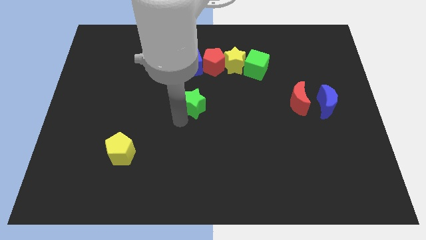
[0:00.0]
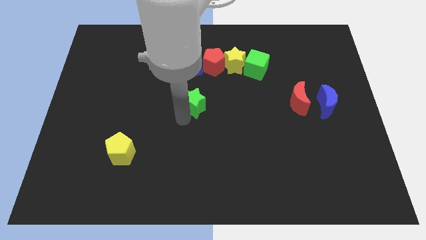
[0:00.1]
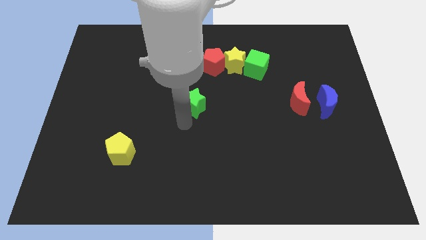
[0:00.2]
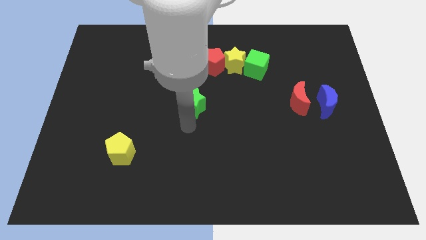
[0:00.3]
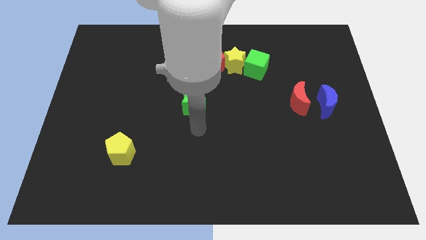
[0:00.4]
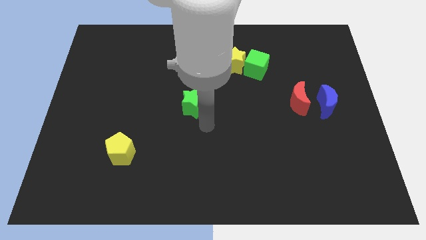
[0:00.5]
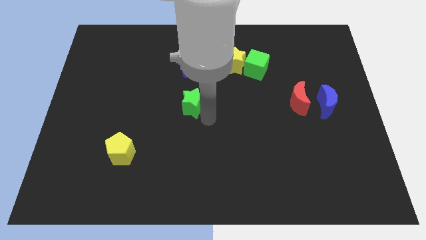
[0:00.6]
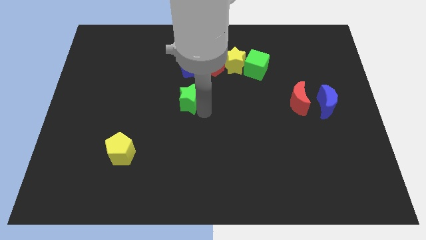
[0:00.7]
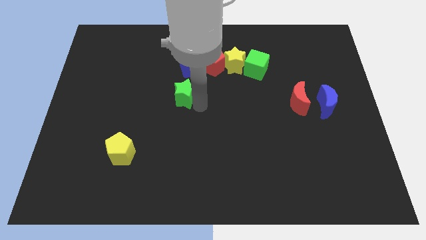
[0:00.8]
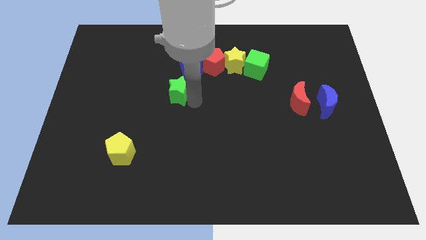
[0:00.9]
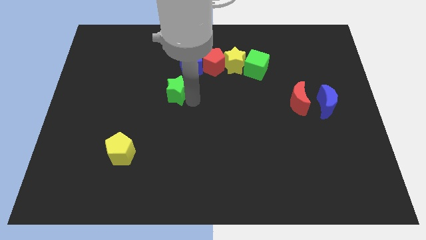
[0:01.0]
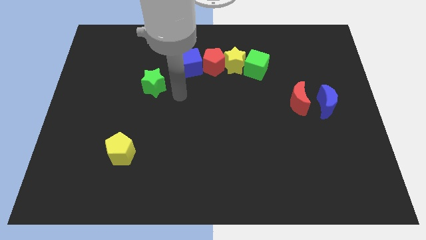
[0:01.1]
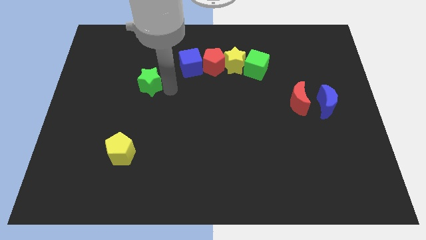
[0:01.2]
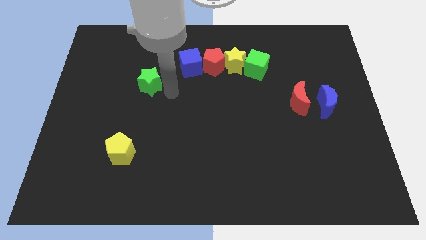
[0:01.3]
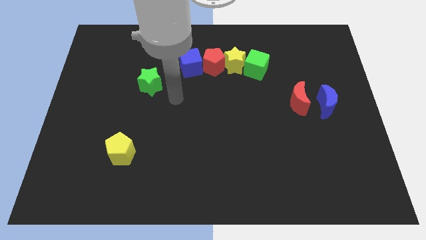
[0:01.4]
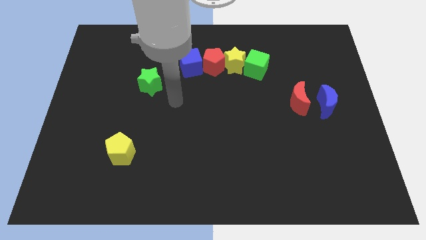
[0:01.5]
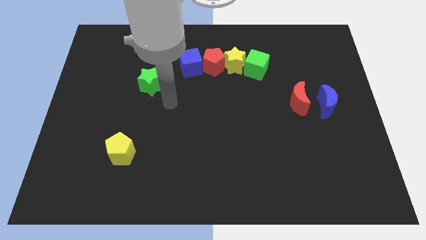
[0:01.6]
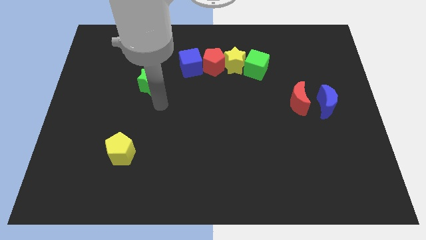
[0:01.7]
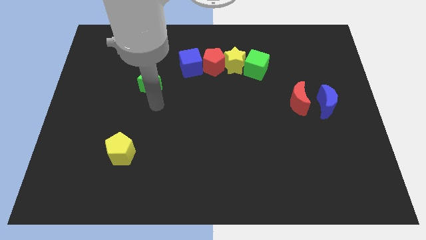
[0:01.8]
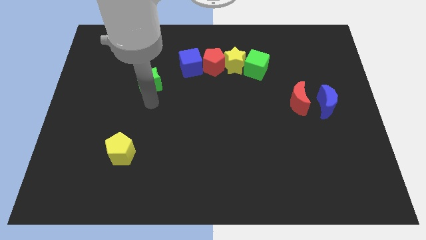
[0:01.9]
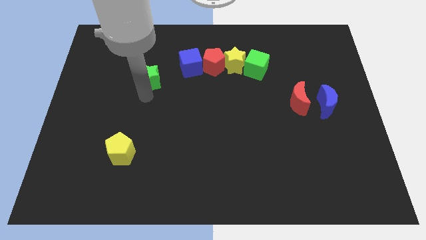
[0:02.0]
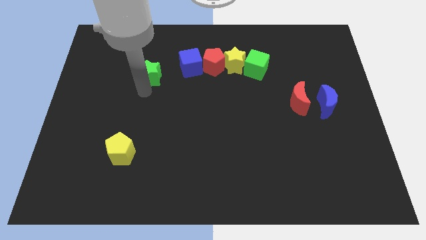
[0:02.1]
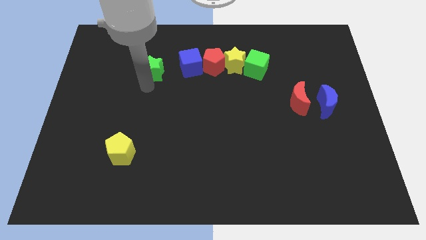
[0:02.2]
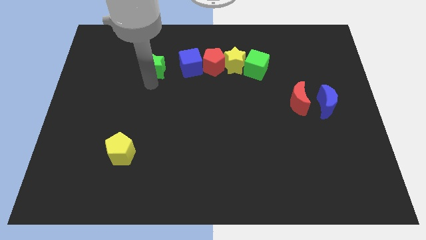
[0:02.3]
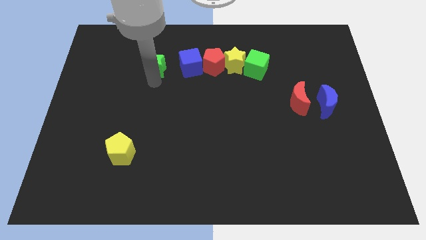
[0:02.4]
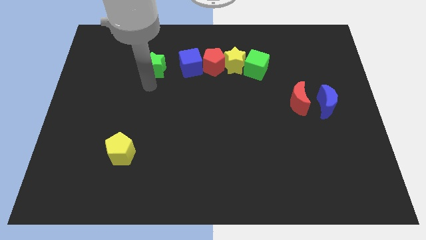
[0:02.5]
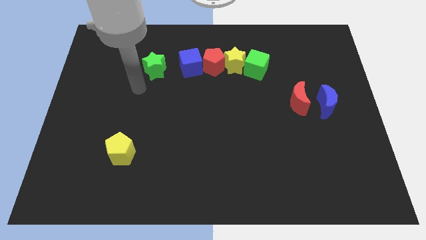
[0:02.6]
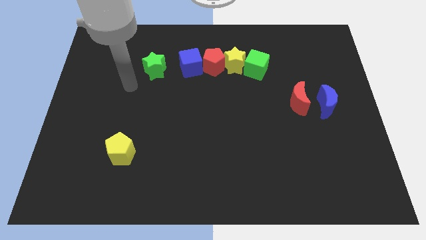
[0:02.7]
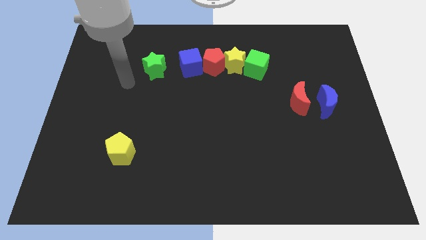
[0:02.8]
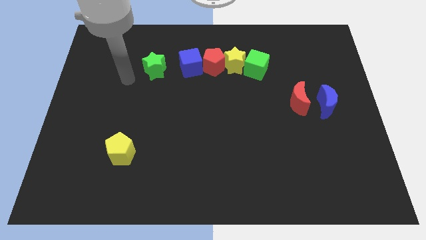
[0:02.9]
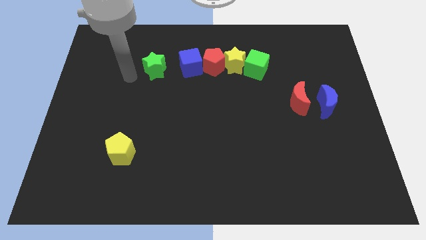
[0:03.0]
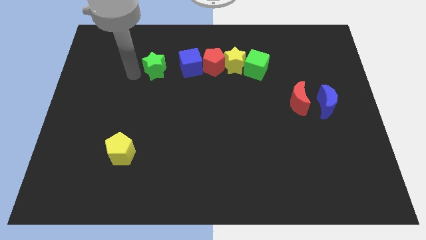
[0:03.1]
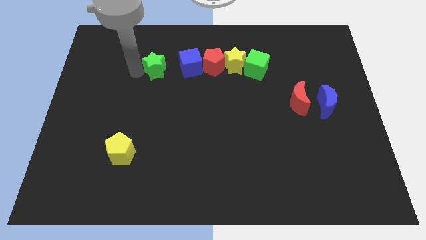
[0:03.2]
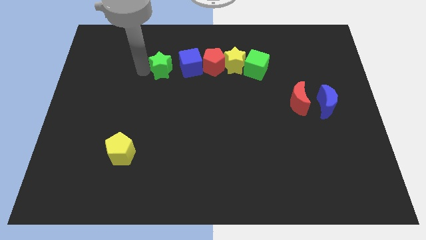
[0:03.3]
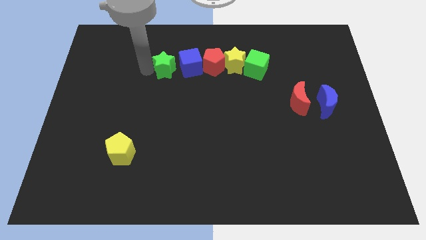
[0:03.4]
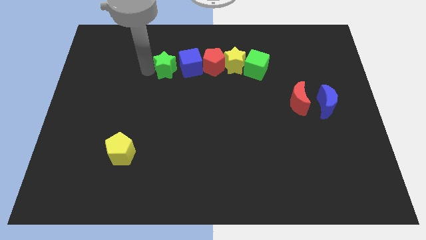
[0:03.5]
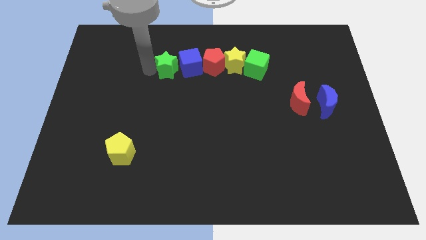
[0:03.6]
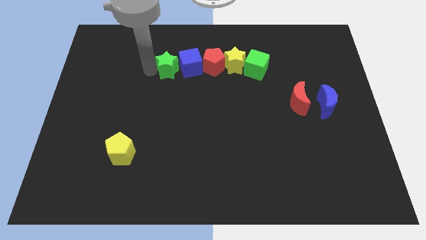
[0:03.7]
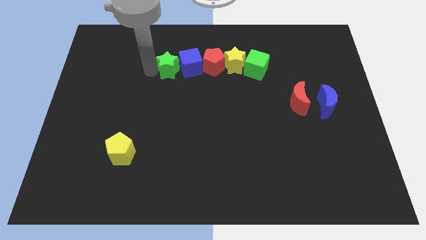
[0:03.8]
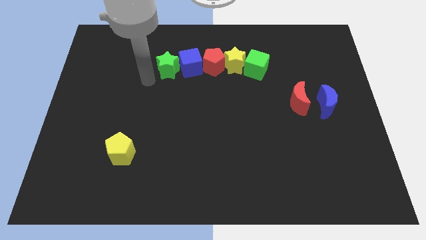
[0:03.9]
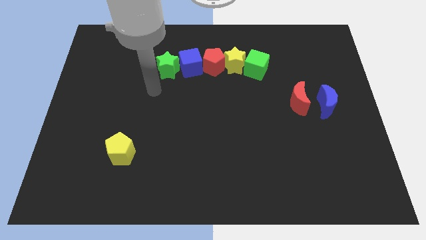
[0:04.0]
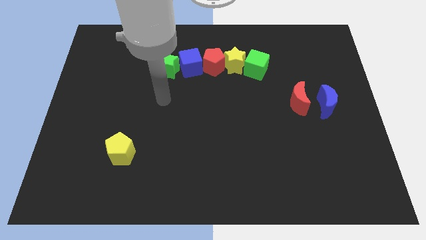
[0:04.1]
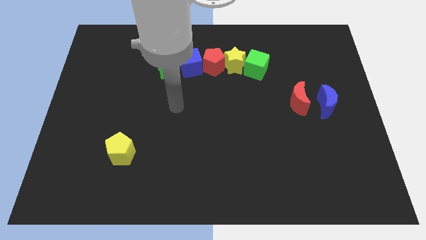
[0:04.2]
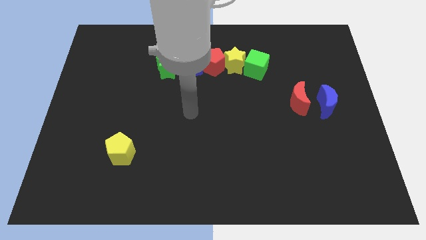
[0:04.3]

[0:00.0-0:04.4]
move green star left to the blue cube

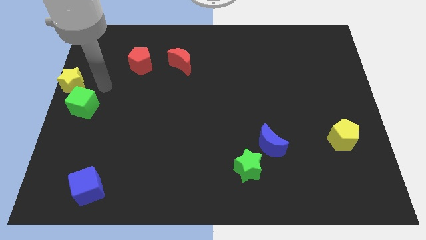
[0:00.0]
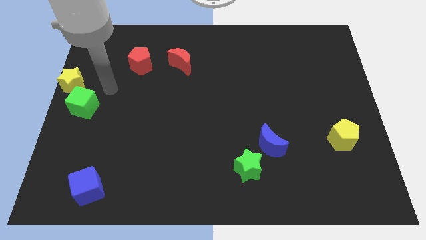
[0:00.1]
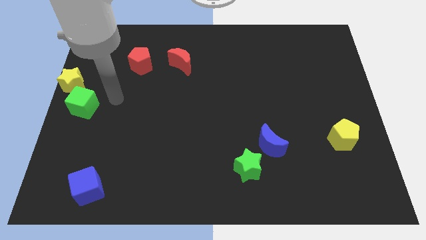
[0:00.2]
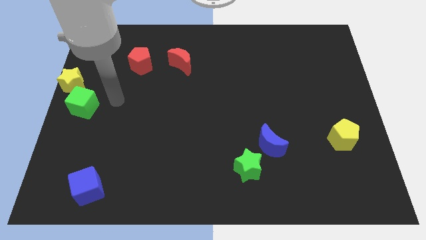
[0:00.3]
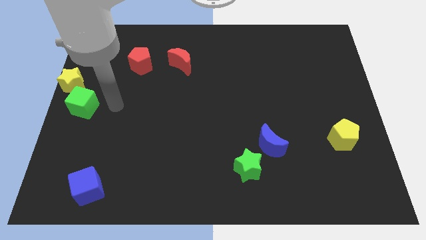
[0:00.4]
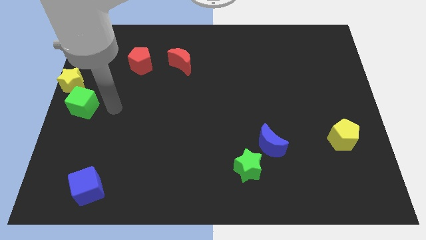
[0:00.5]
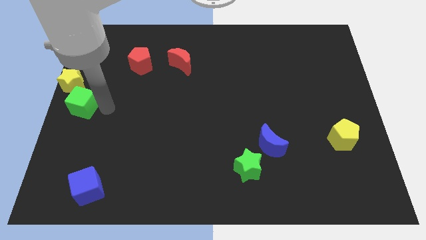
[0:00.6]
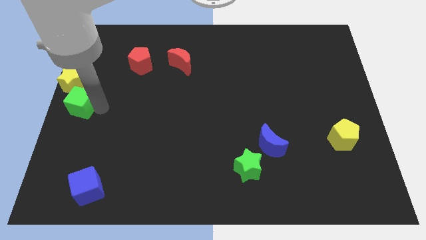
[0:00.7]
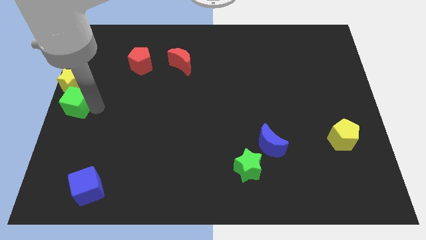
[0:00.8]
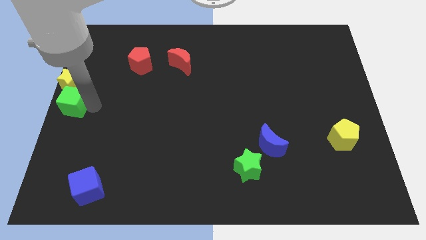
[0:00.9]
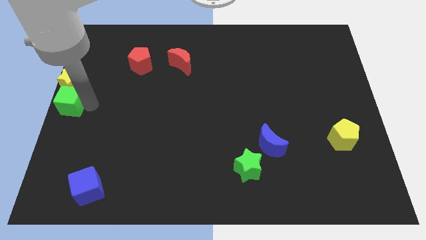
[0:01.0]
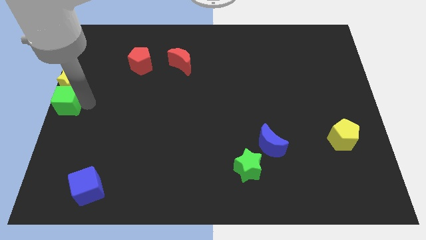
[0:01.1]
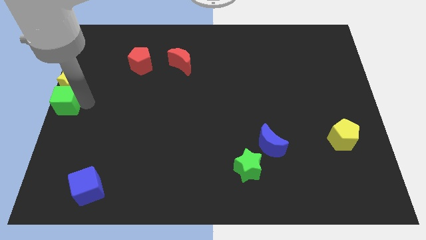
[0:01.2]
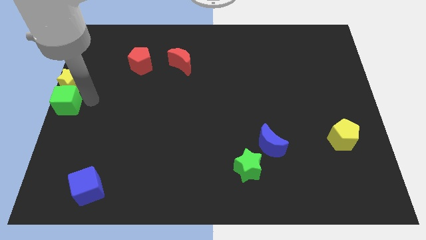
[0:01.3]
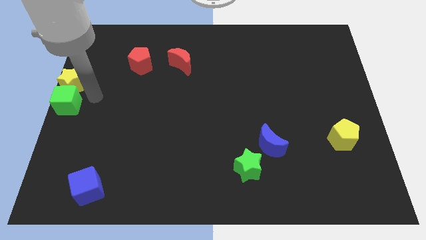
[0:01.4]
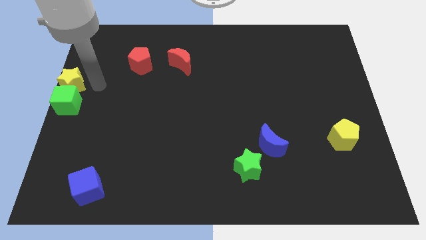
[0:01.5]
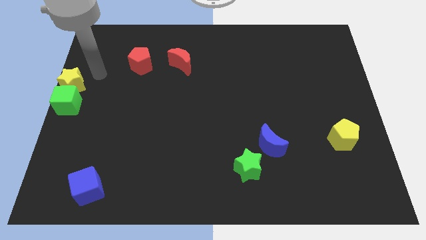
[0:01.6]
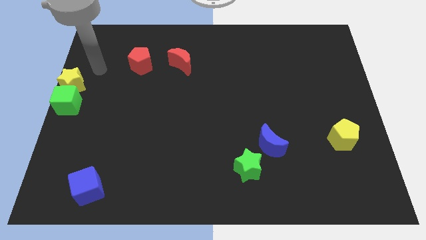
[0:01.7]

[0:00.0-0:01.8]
move the green cube below the yellow star

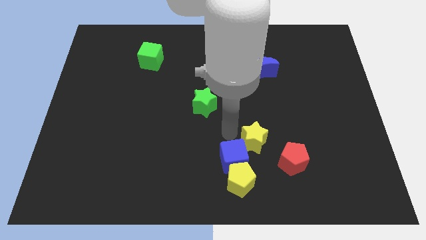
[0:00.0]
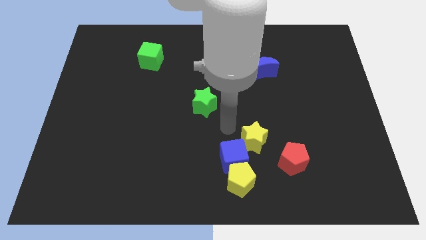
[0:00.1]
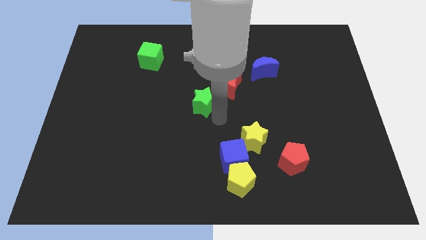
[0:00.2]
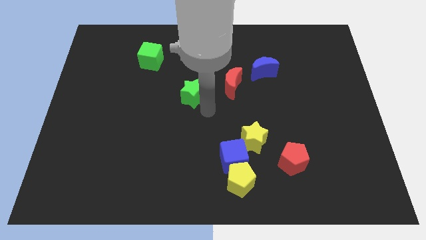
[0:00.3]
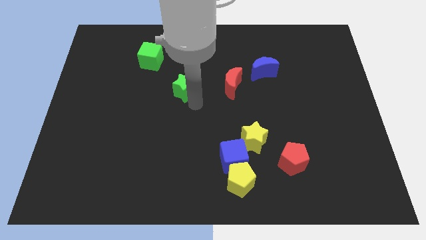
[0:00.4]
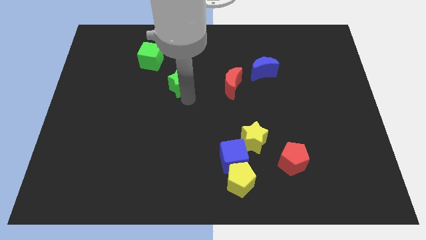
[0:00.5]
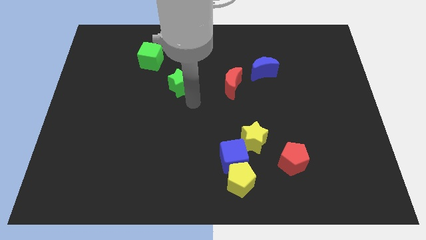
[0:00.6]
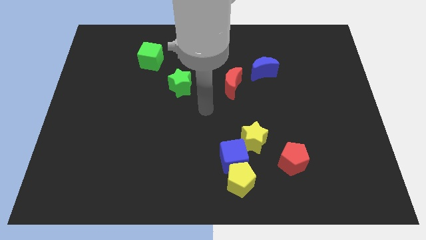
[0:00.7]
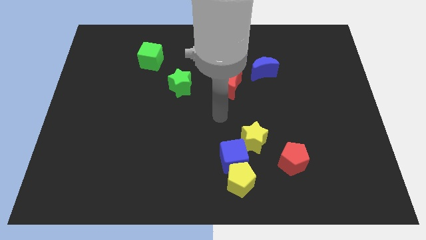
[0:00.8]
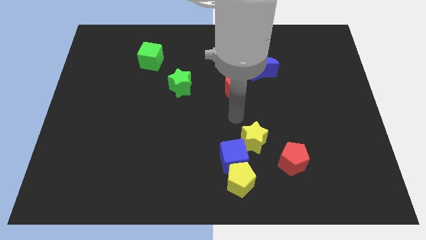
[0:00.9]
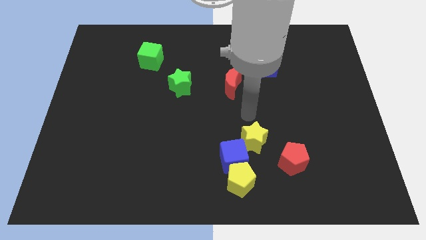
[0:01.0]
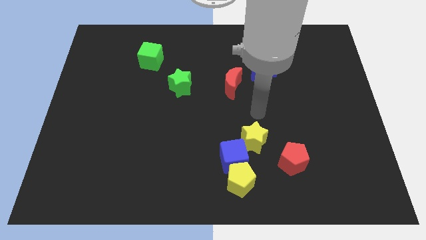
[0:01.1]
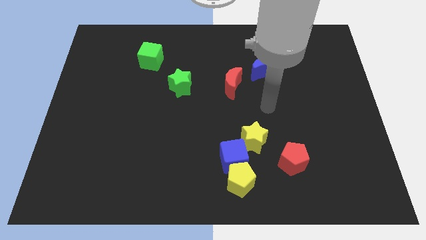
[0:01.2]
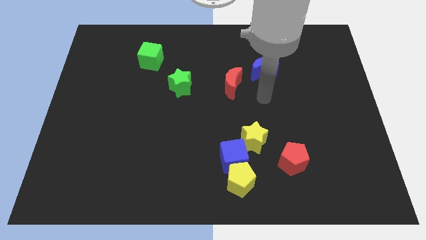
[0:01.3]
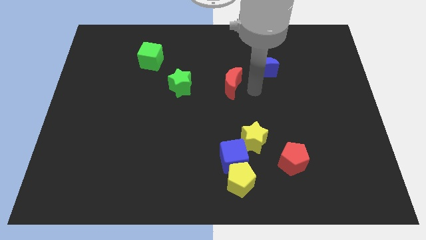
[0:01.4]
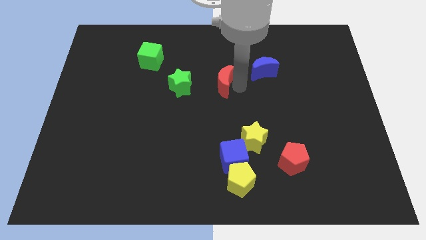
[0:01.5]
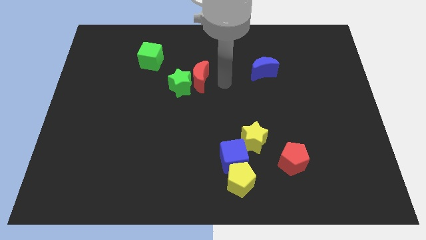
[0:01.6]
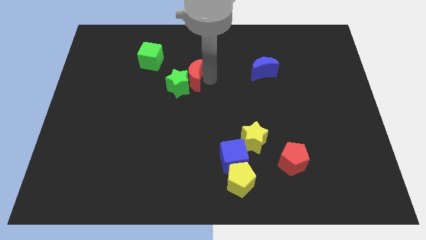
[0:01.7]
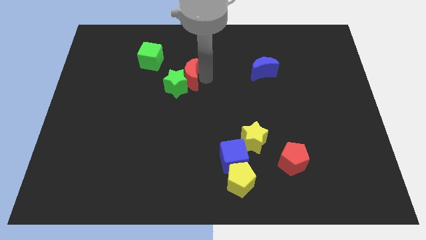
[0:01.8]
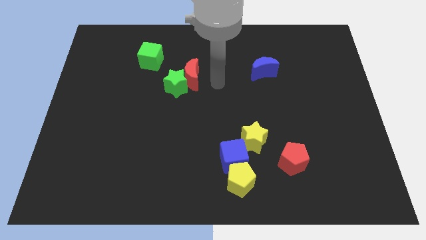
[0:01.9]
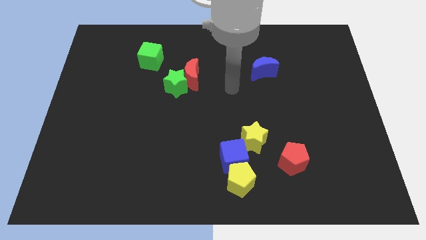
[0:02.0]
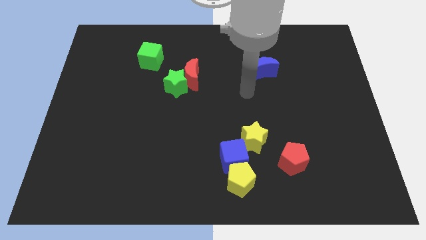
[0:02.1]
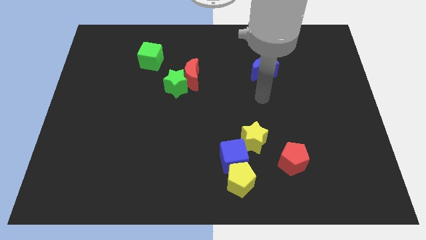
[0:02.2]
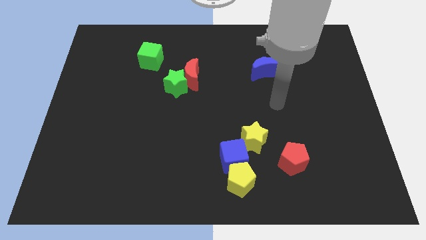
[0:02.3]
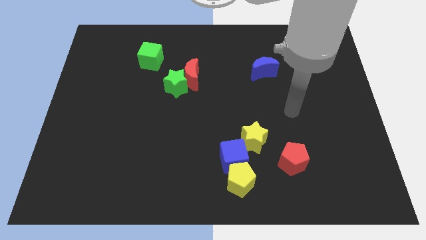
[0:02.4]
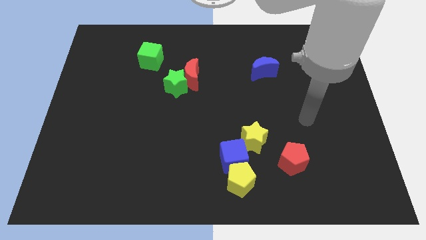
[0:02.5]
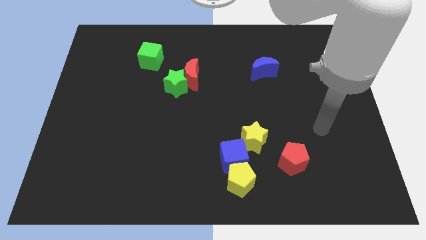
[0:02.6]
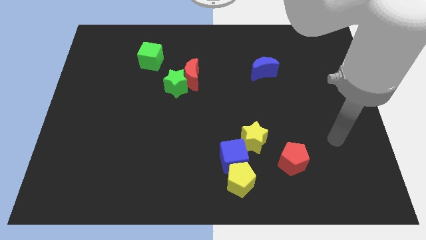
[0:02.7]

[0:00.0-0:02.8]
move the green star and the red crescent to the bottom right of the green cube
